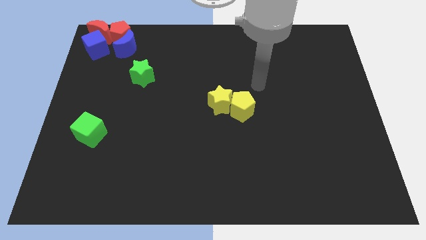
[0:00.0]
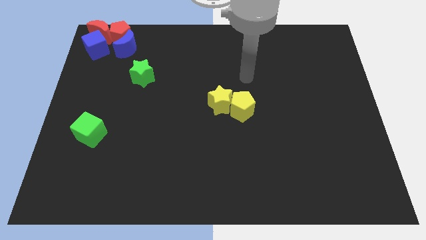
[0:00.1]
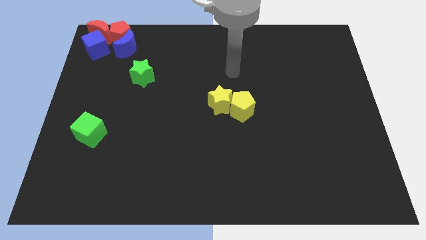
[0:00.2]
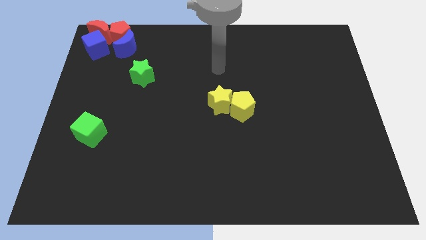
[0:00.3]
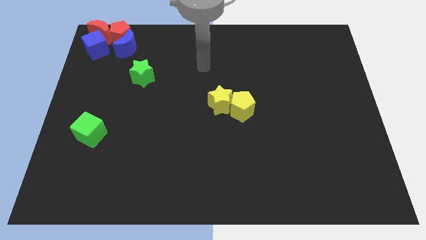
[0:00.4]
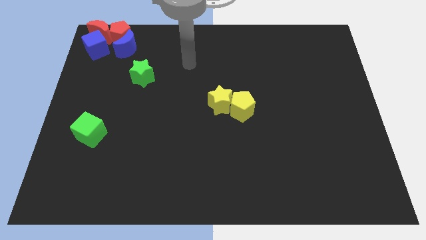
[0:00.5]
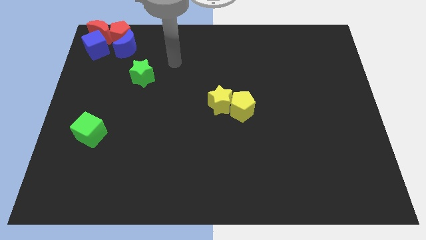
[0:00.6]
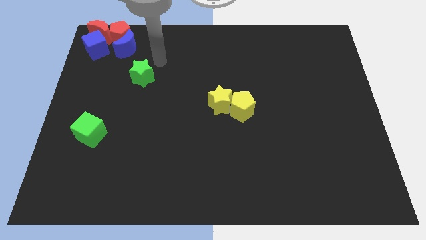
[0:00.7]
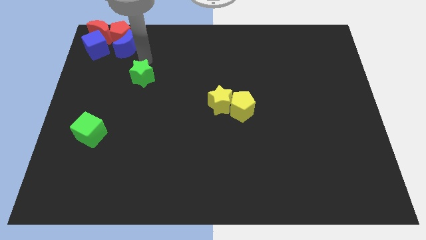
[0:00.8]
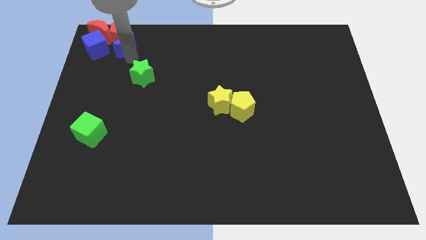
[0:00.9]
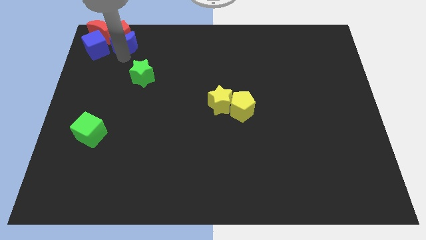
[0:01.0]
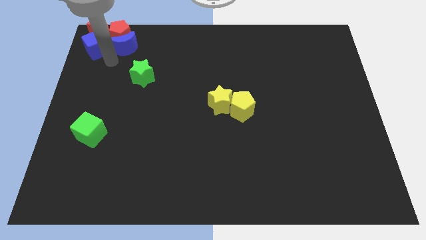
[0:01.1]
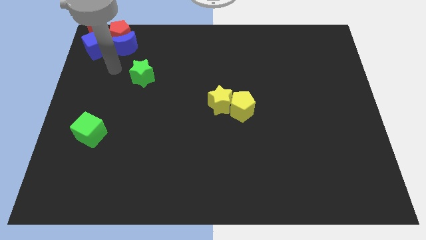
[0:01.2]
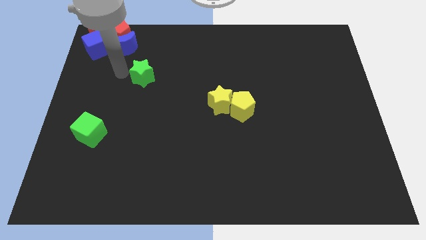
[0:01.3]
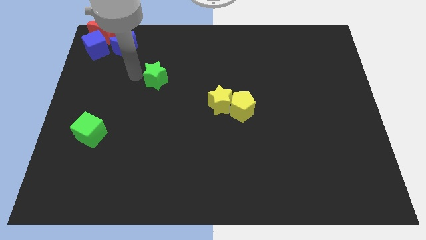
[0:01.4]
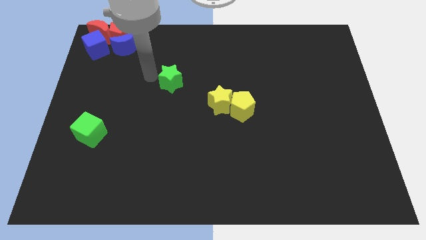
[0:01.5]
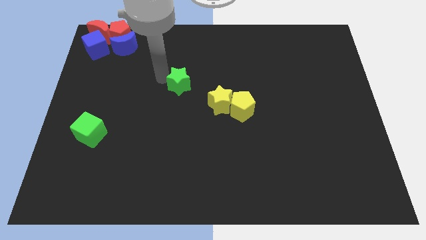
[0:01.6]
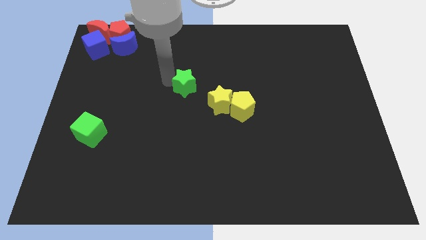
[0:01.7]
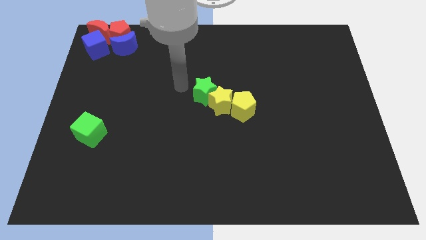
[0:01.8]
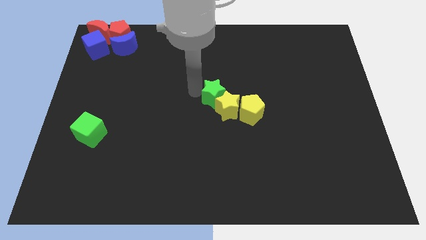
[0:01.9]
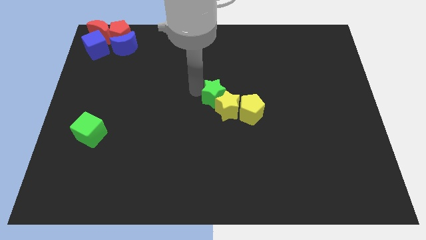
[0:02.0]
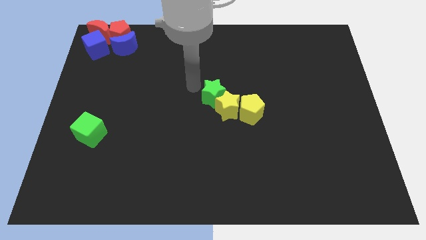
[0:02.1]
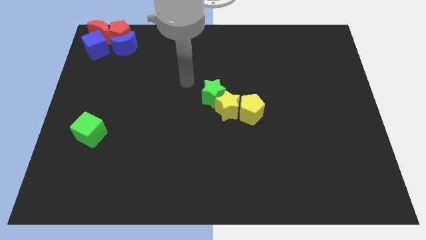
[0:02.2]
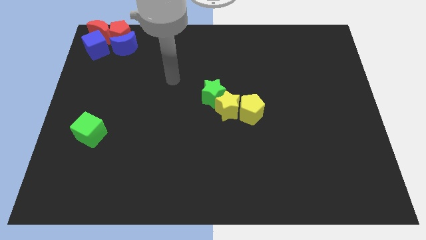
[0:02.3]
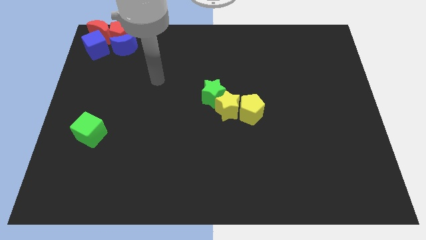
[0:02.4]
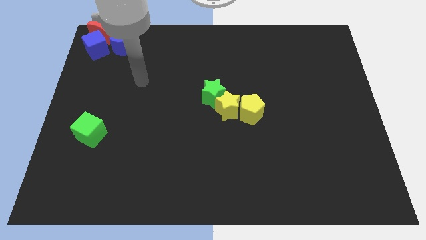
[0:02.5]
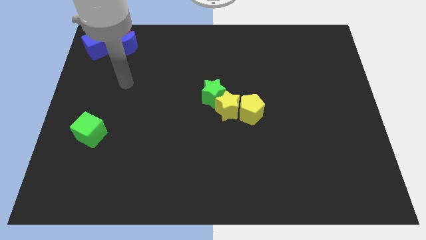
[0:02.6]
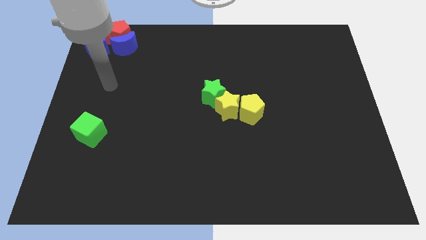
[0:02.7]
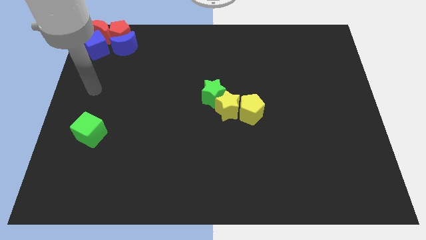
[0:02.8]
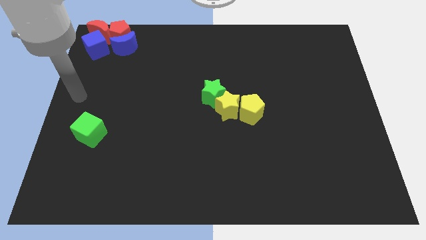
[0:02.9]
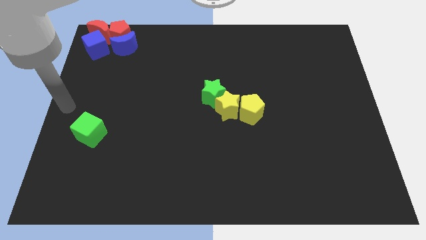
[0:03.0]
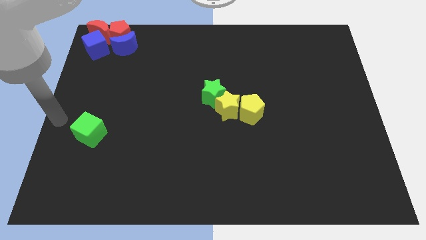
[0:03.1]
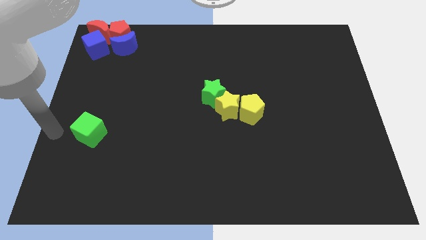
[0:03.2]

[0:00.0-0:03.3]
move the green star into the yellow star

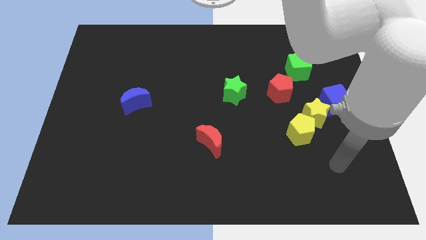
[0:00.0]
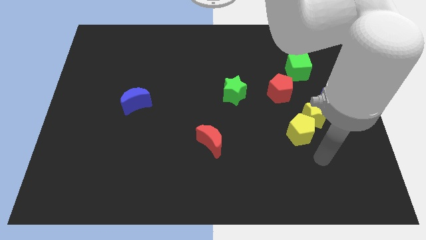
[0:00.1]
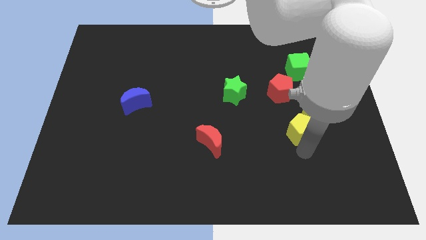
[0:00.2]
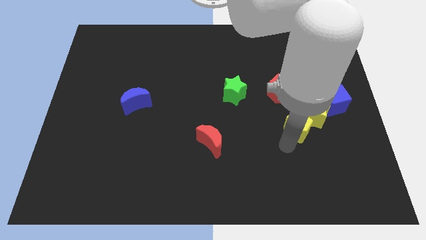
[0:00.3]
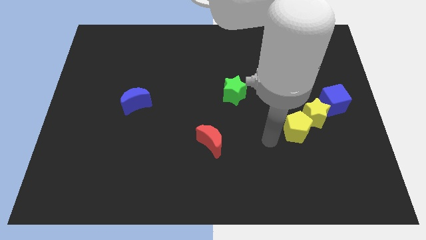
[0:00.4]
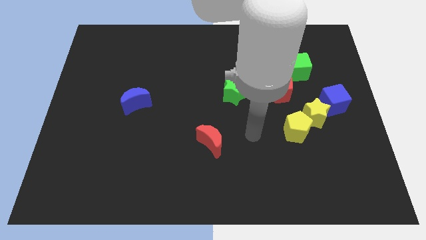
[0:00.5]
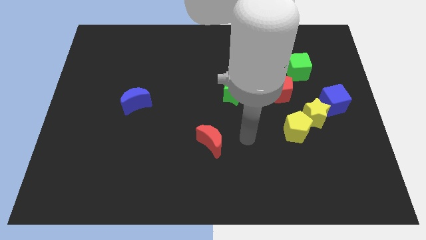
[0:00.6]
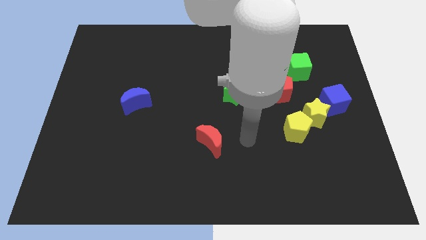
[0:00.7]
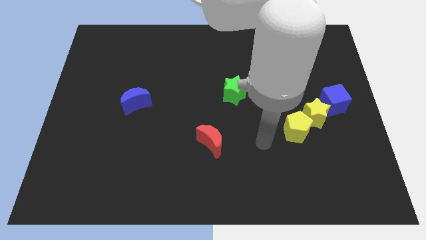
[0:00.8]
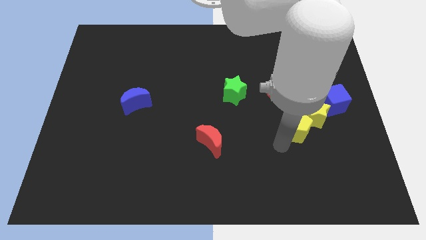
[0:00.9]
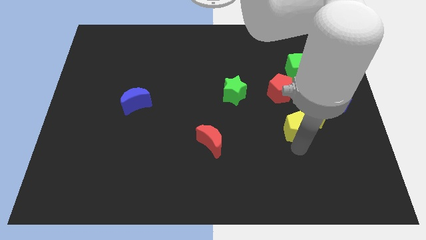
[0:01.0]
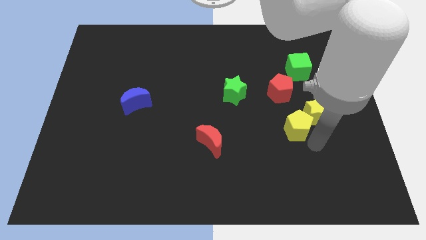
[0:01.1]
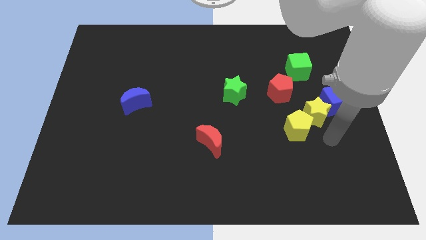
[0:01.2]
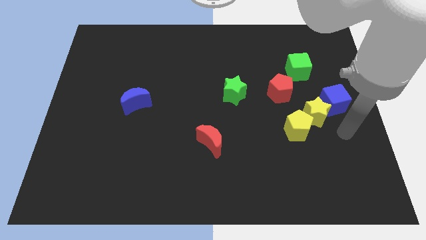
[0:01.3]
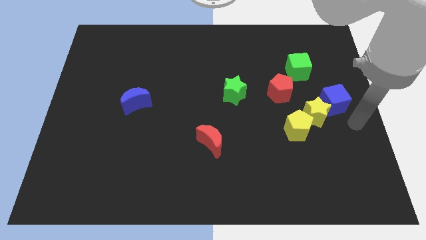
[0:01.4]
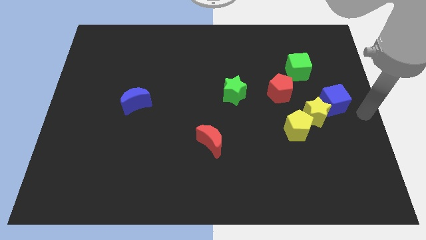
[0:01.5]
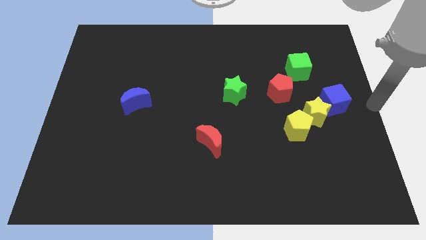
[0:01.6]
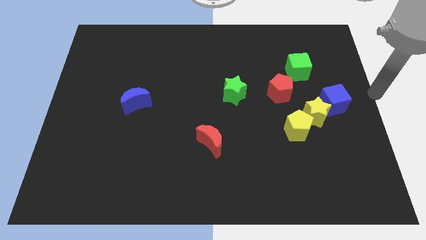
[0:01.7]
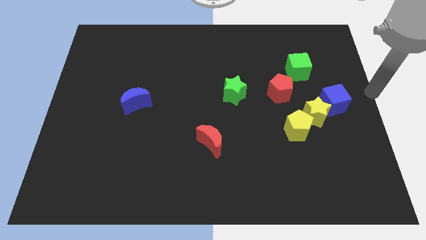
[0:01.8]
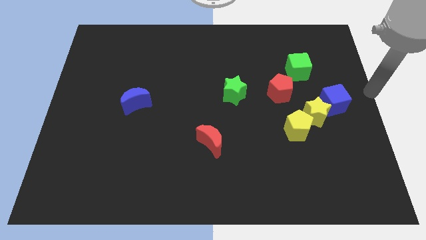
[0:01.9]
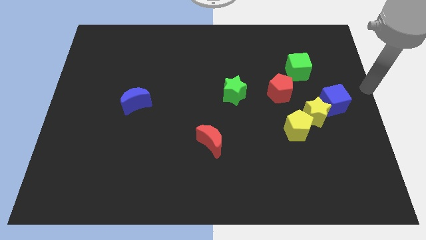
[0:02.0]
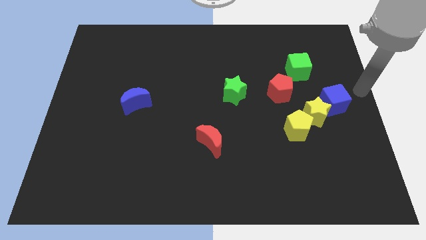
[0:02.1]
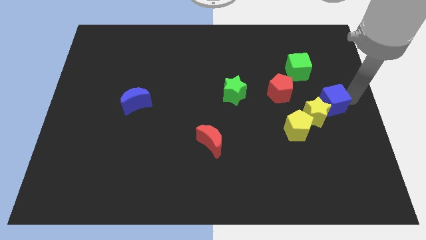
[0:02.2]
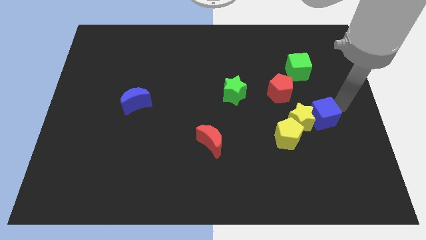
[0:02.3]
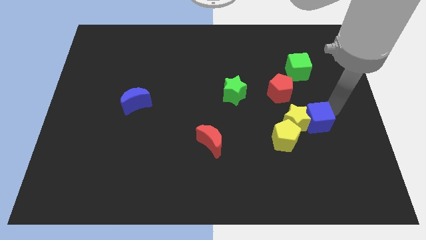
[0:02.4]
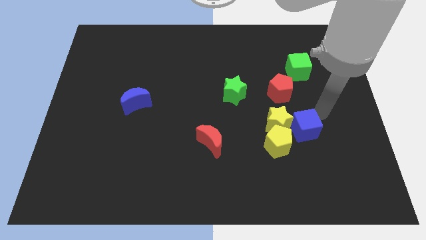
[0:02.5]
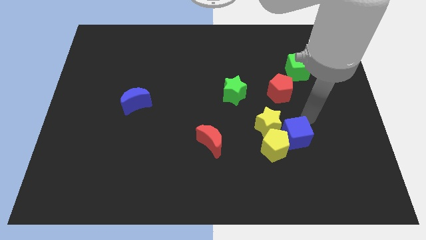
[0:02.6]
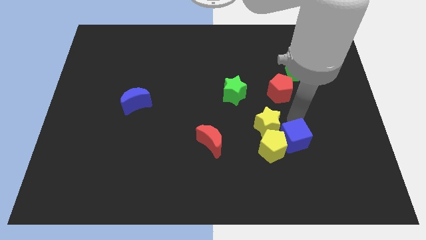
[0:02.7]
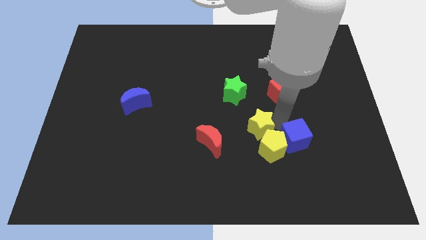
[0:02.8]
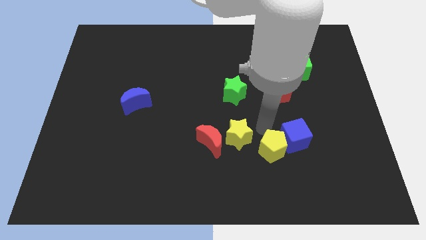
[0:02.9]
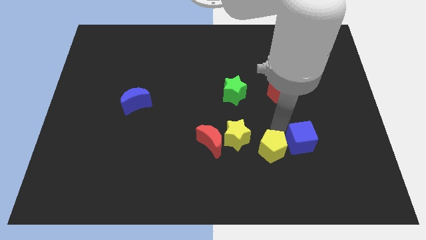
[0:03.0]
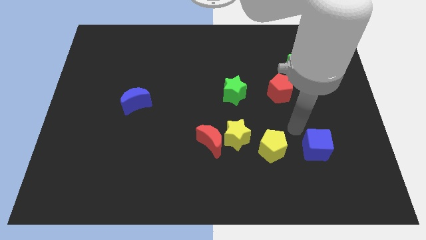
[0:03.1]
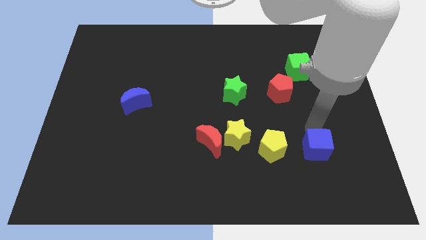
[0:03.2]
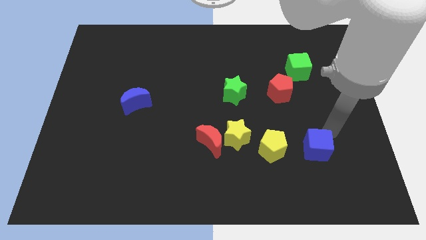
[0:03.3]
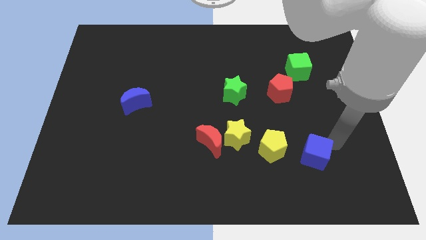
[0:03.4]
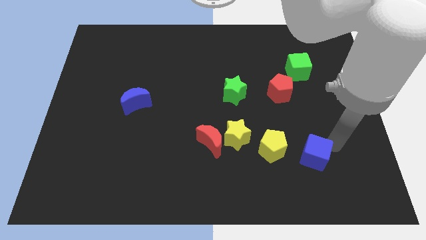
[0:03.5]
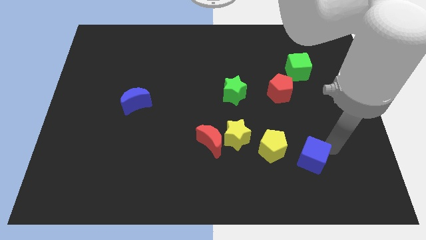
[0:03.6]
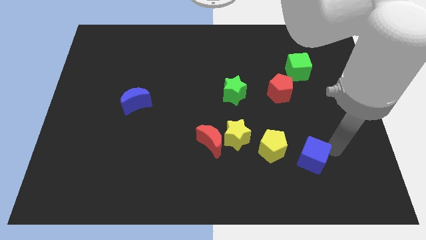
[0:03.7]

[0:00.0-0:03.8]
push the yellow star close to the red moon

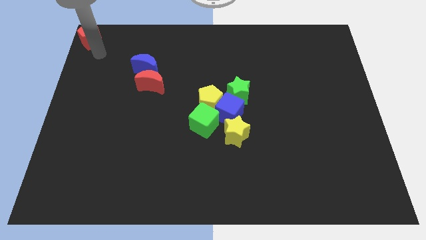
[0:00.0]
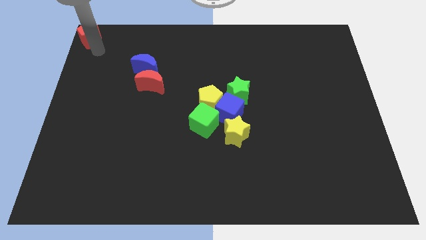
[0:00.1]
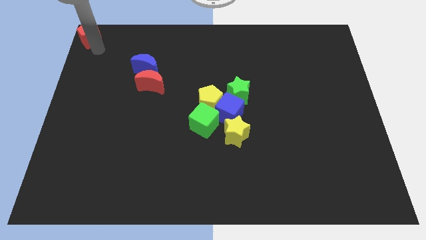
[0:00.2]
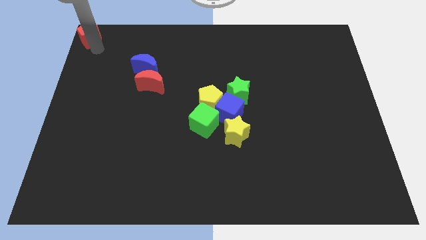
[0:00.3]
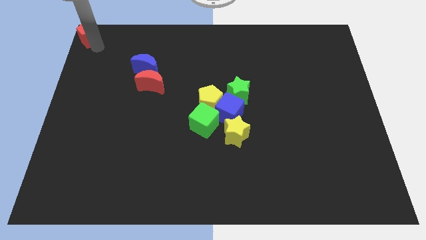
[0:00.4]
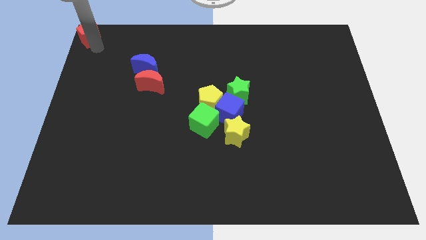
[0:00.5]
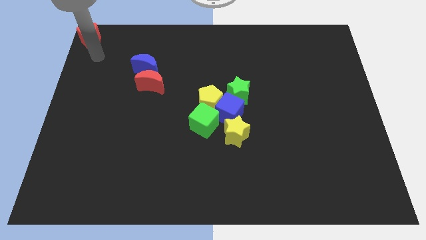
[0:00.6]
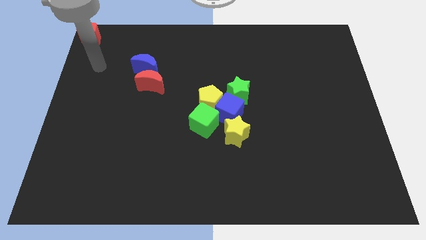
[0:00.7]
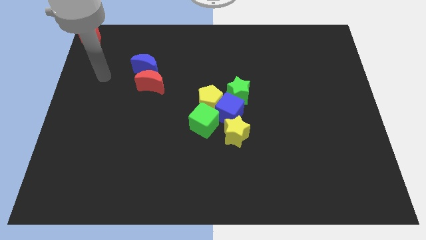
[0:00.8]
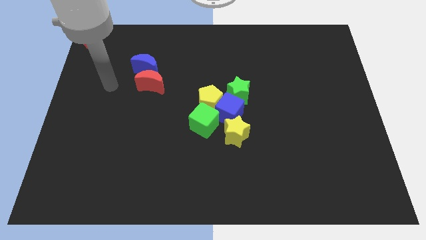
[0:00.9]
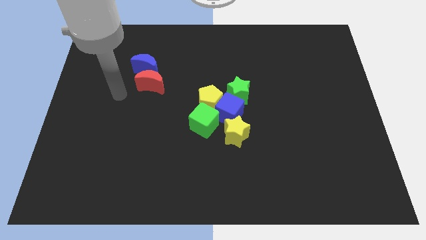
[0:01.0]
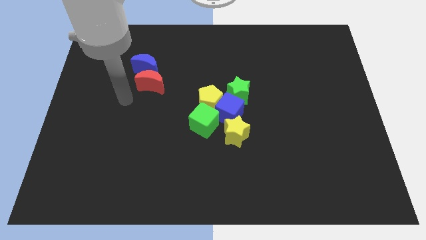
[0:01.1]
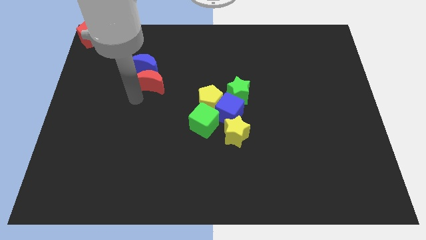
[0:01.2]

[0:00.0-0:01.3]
move red pentagon to the top left corner

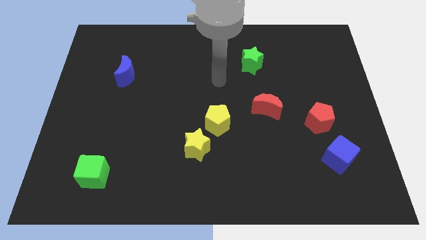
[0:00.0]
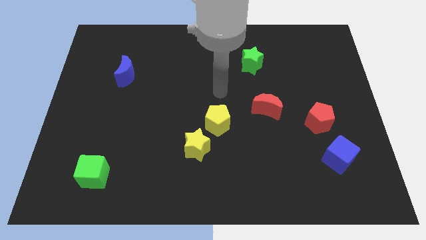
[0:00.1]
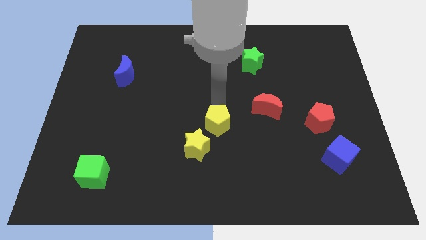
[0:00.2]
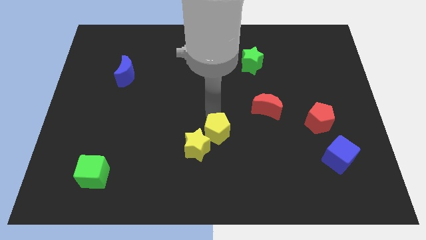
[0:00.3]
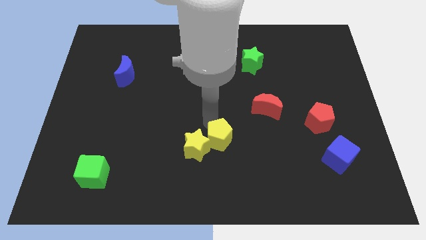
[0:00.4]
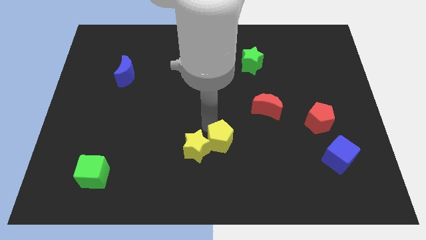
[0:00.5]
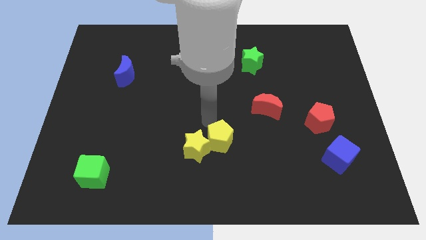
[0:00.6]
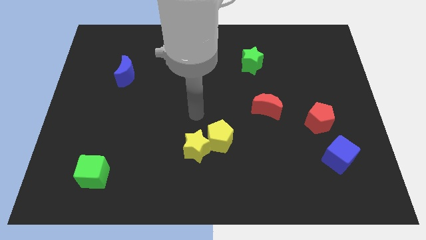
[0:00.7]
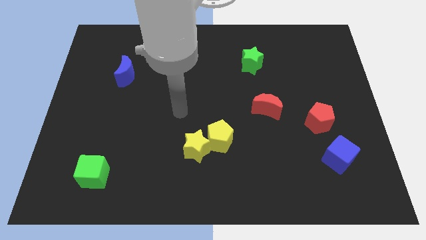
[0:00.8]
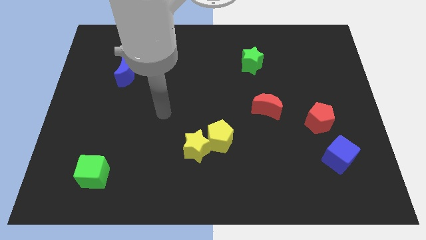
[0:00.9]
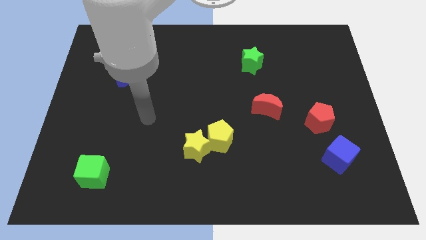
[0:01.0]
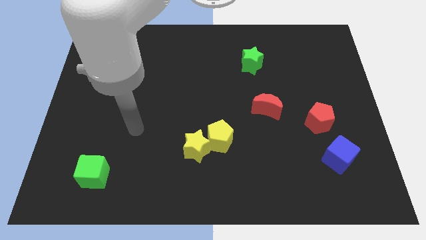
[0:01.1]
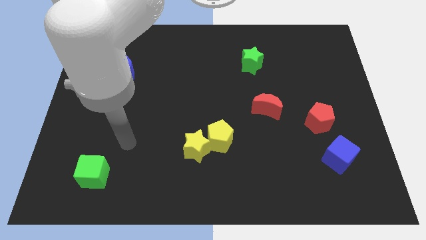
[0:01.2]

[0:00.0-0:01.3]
push yellow pentagon into the yellow star
